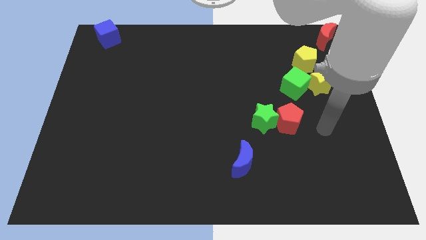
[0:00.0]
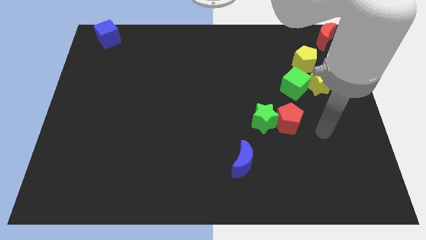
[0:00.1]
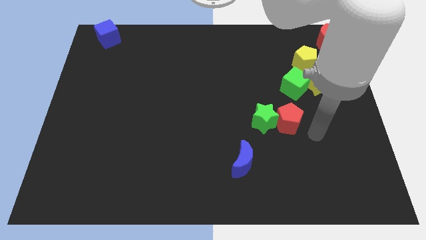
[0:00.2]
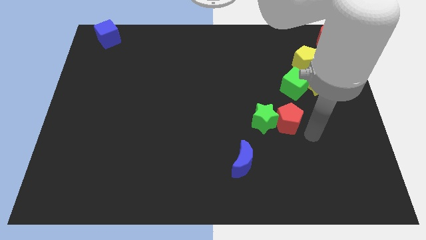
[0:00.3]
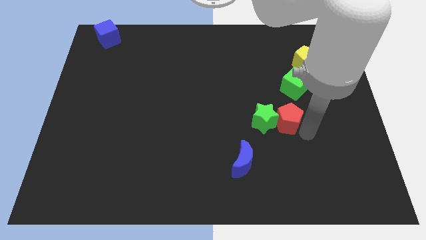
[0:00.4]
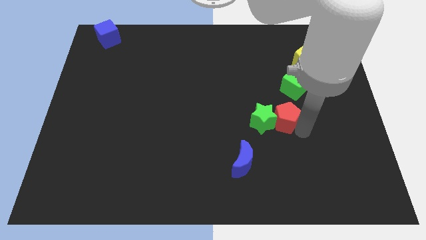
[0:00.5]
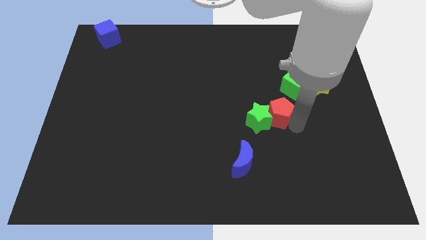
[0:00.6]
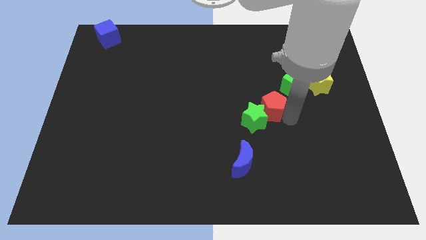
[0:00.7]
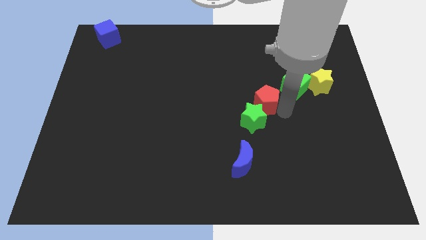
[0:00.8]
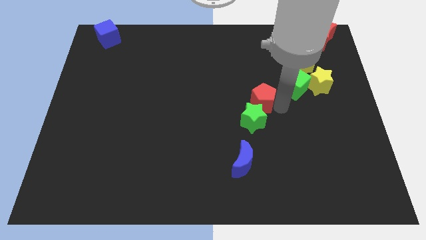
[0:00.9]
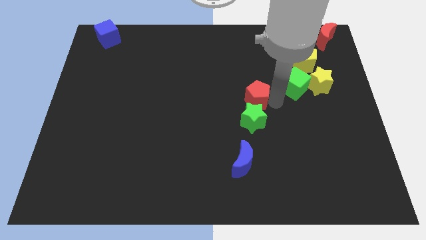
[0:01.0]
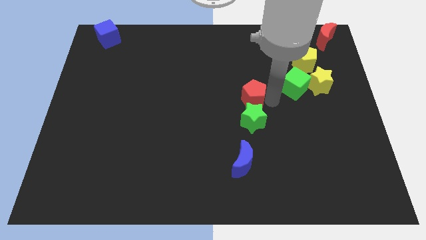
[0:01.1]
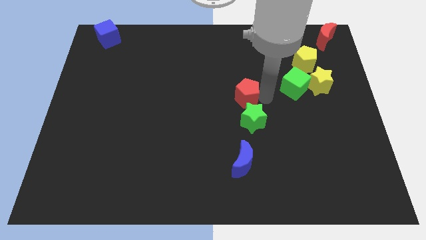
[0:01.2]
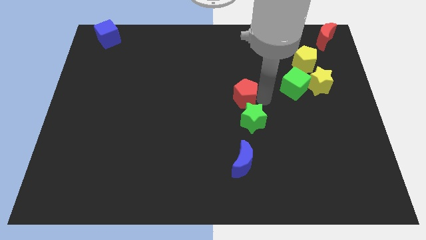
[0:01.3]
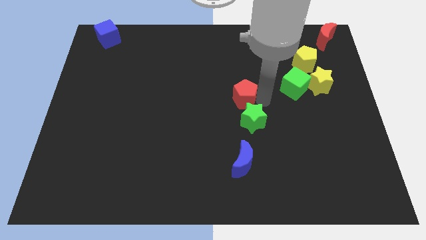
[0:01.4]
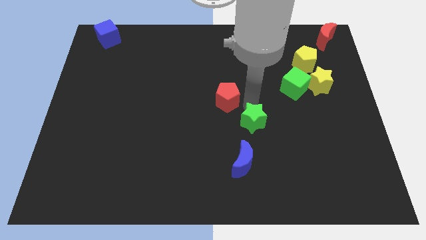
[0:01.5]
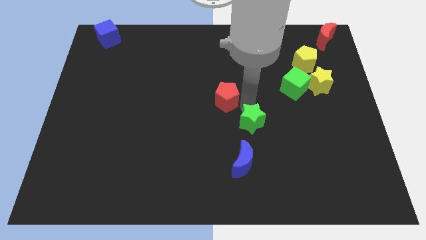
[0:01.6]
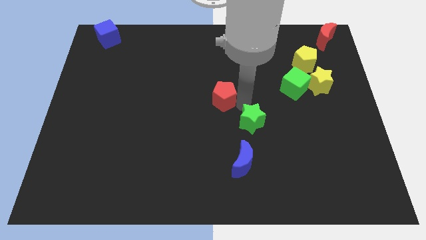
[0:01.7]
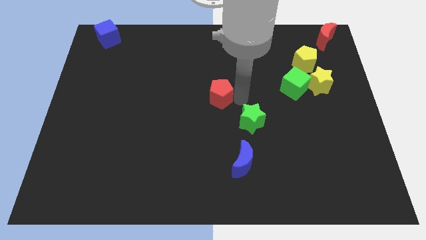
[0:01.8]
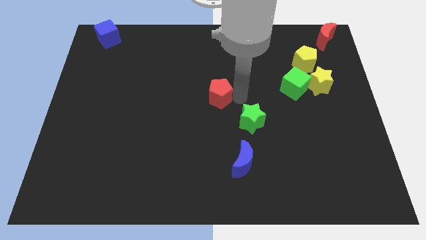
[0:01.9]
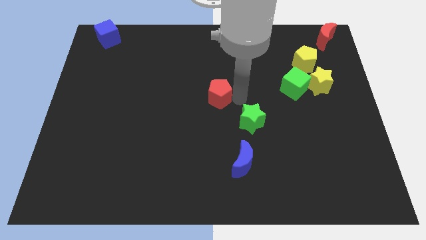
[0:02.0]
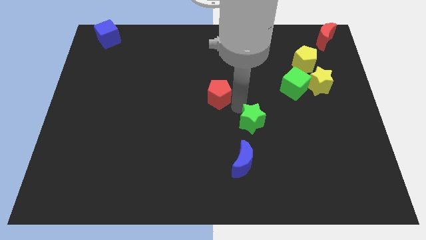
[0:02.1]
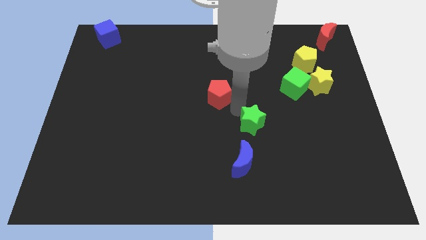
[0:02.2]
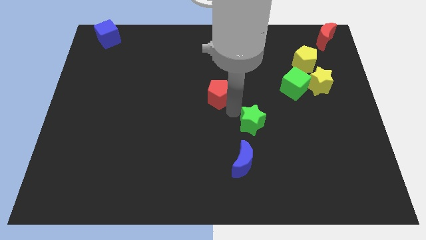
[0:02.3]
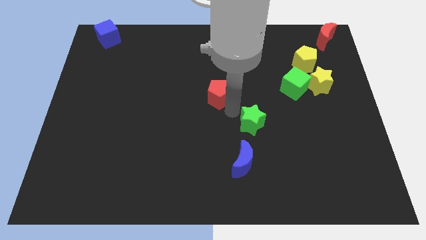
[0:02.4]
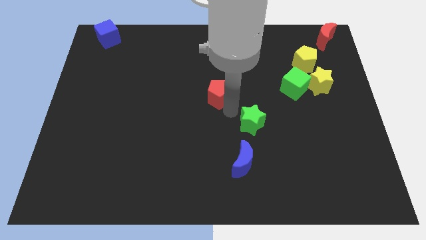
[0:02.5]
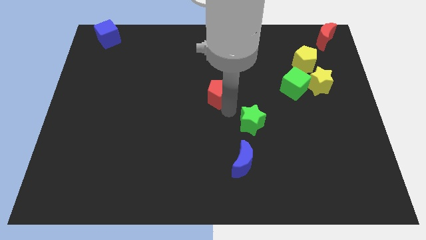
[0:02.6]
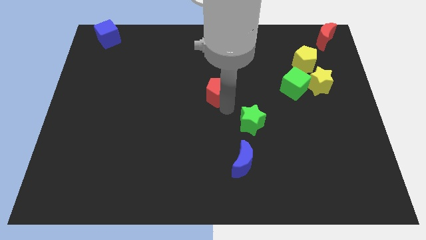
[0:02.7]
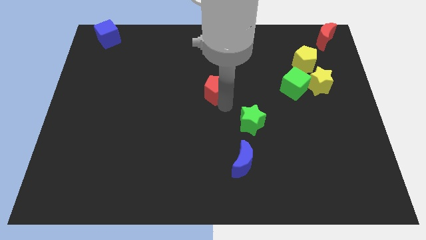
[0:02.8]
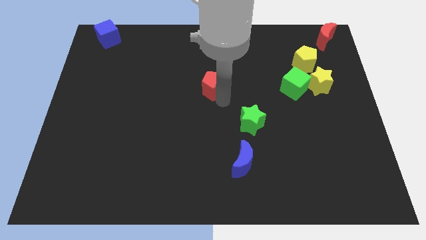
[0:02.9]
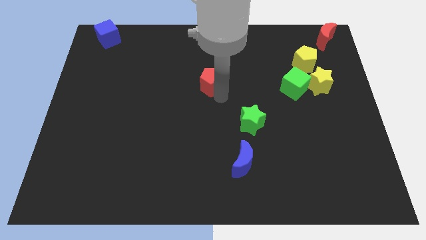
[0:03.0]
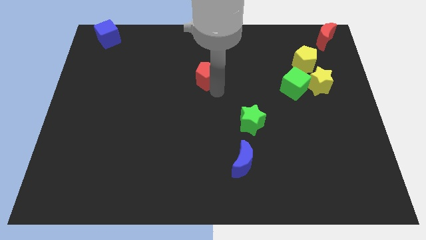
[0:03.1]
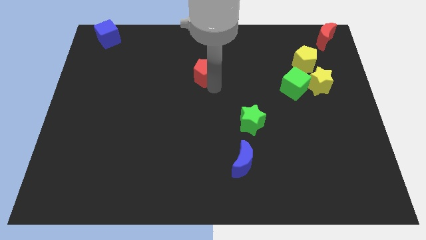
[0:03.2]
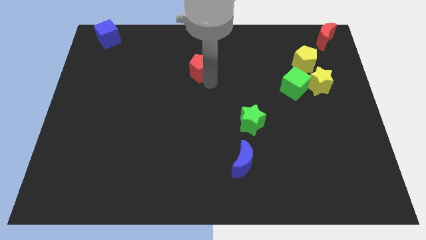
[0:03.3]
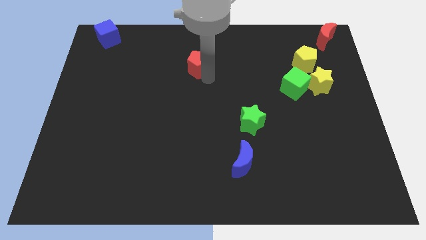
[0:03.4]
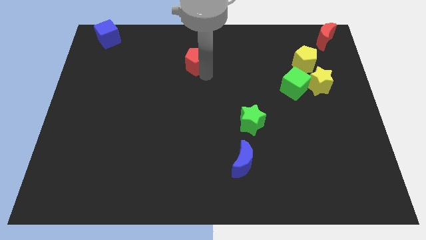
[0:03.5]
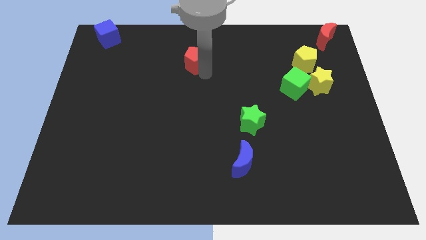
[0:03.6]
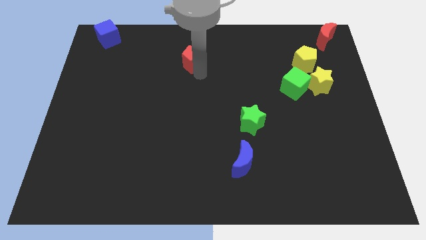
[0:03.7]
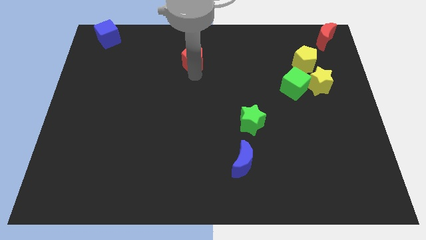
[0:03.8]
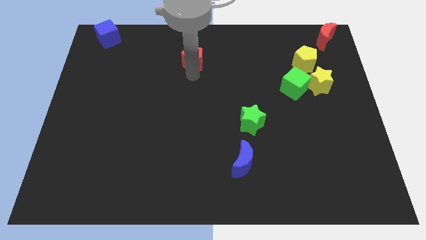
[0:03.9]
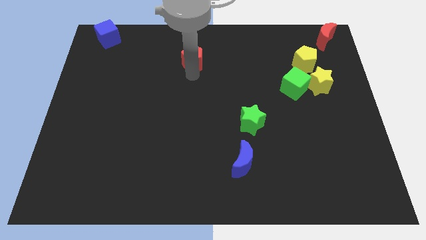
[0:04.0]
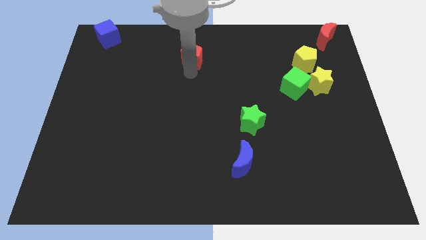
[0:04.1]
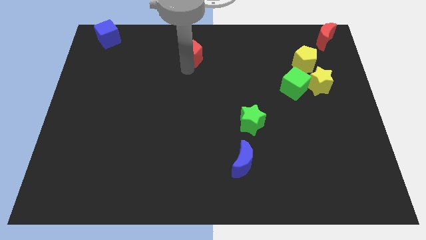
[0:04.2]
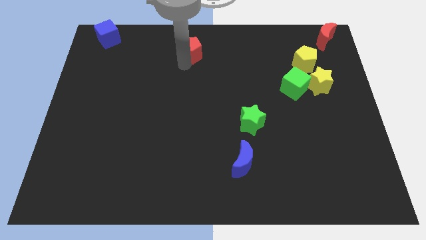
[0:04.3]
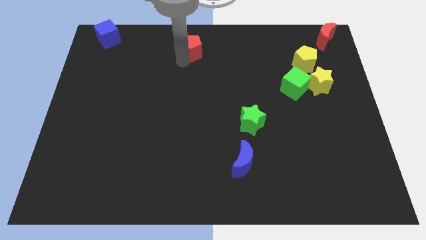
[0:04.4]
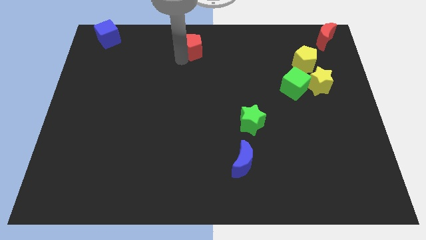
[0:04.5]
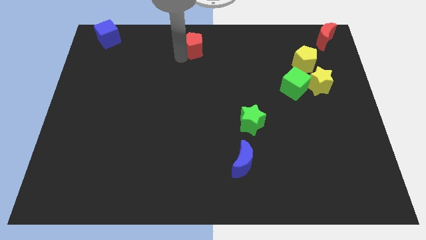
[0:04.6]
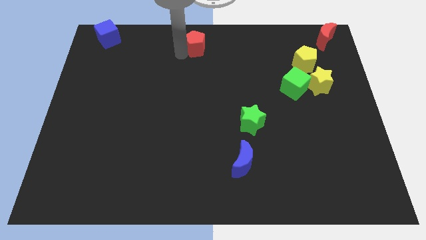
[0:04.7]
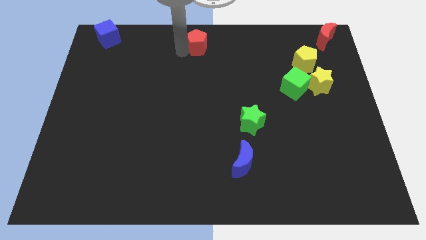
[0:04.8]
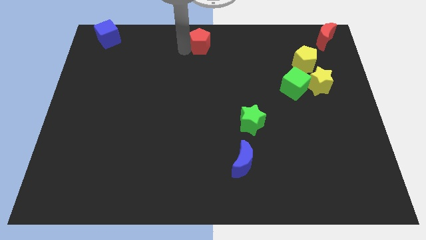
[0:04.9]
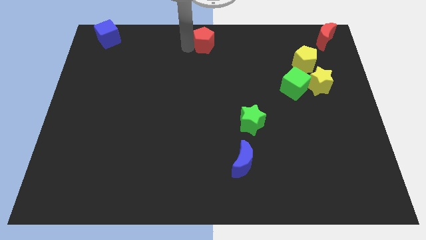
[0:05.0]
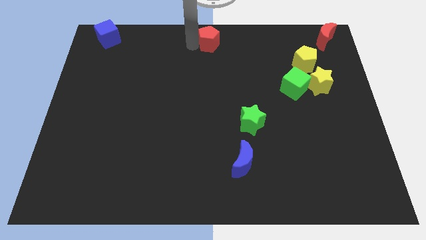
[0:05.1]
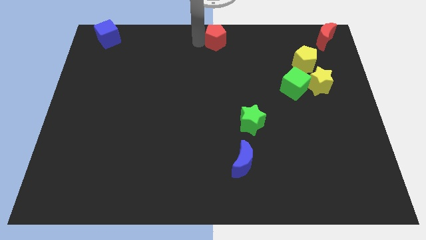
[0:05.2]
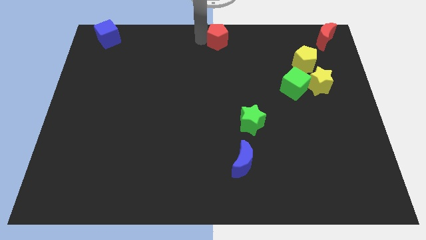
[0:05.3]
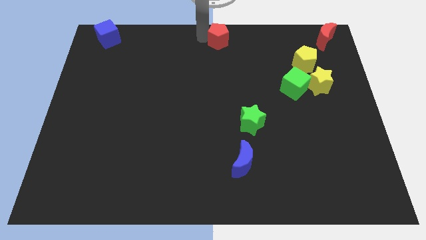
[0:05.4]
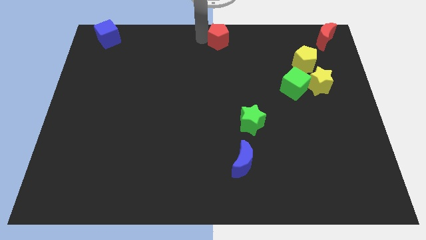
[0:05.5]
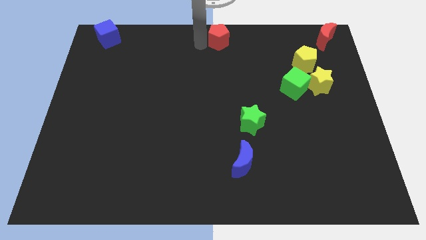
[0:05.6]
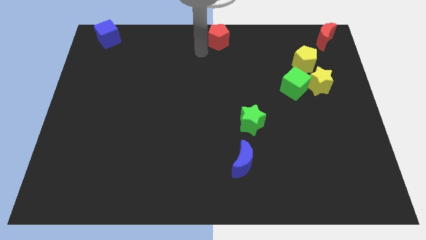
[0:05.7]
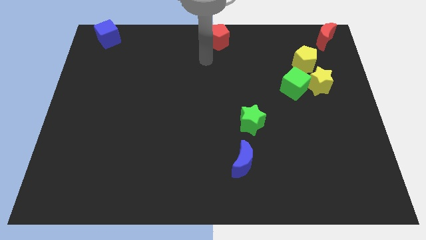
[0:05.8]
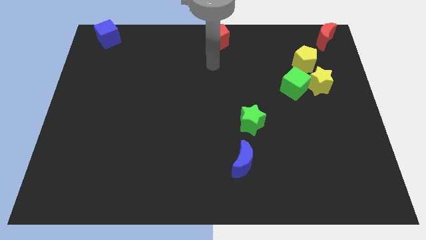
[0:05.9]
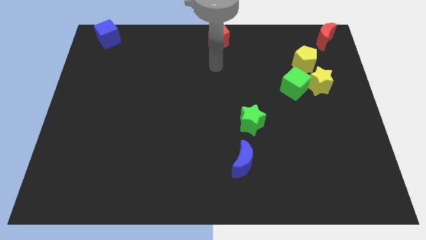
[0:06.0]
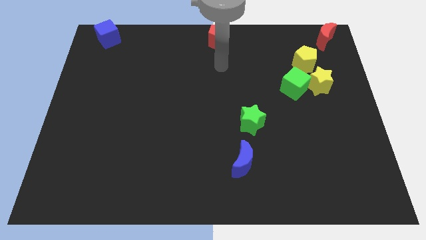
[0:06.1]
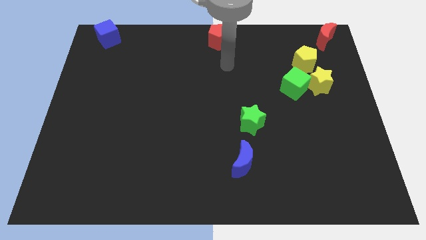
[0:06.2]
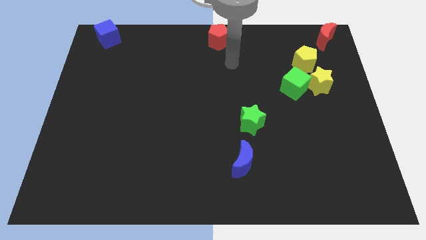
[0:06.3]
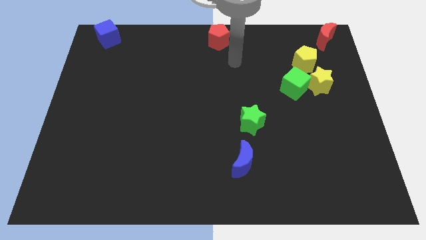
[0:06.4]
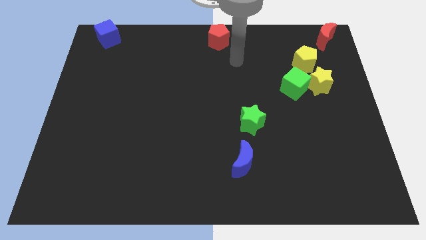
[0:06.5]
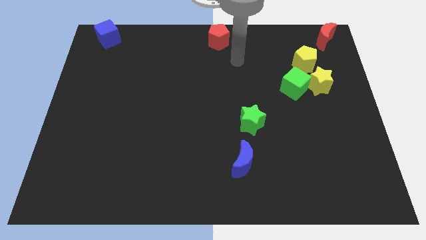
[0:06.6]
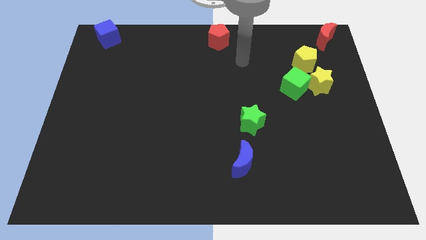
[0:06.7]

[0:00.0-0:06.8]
push the red pentagon to the top center

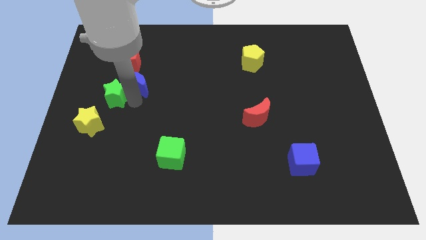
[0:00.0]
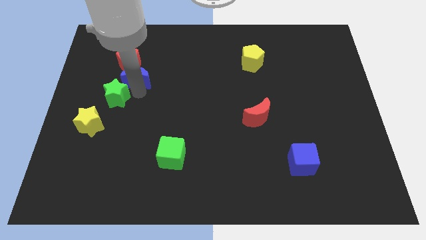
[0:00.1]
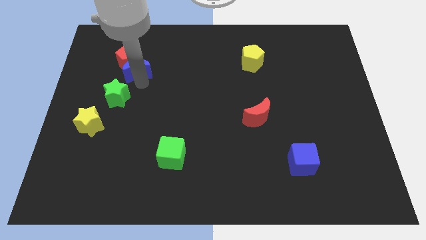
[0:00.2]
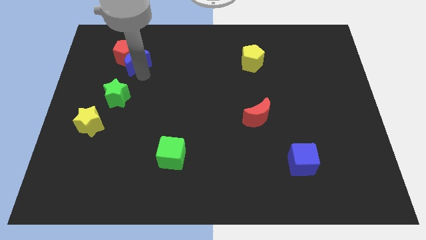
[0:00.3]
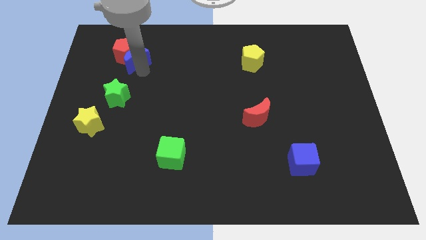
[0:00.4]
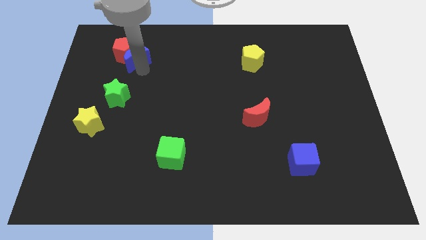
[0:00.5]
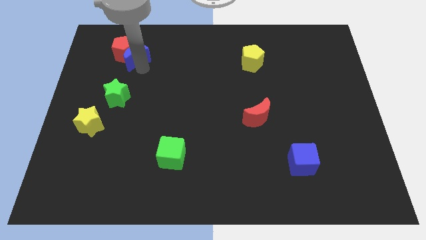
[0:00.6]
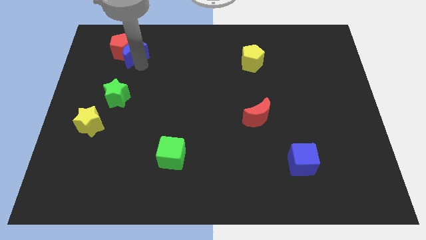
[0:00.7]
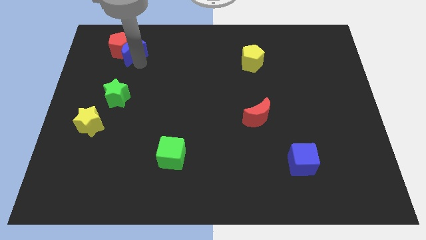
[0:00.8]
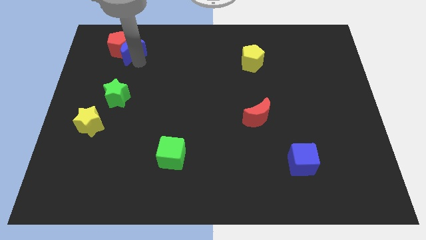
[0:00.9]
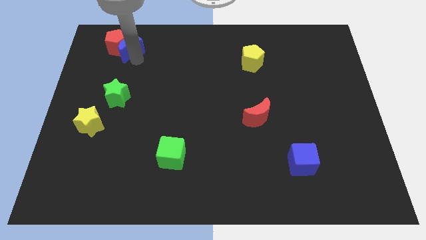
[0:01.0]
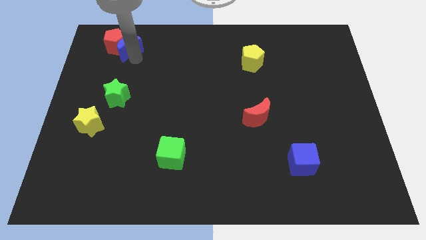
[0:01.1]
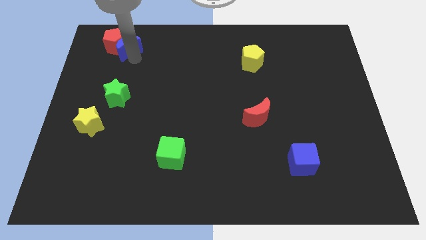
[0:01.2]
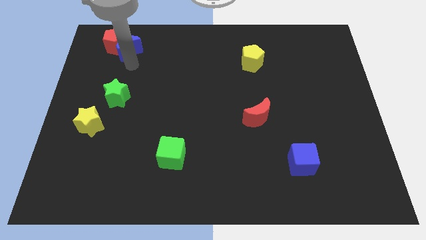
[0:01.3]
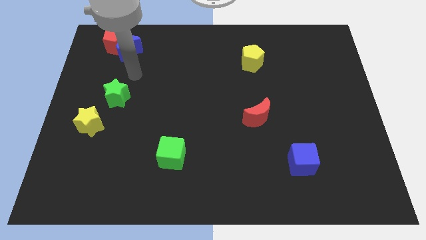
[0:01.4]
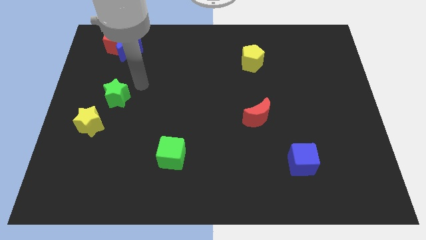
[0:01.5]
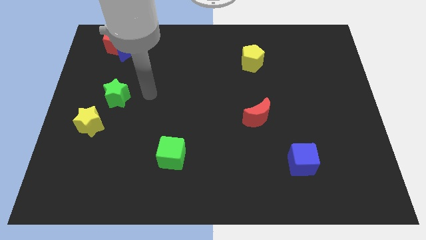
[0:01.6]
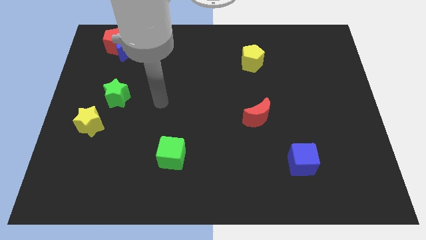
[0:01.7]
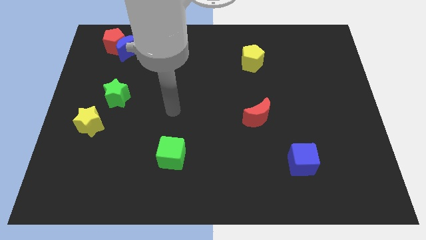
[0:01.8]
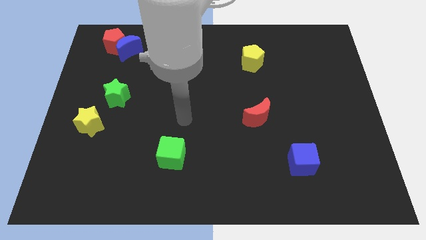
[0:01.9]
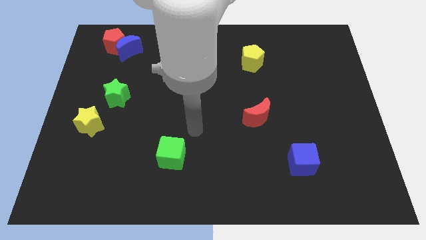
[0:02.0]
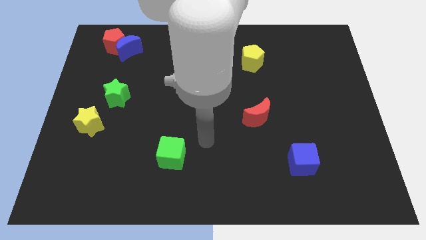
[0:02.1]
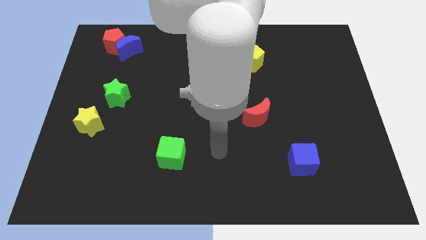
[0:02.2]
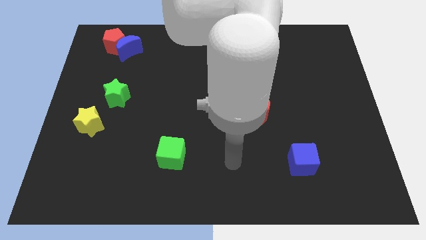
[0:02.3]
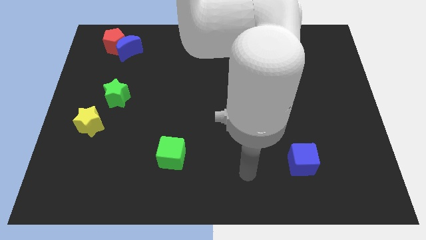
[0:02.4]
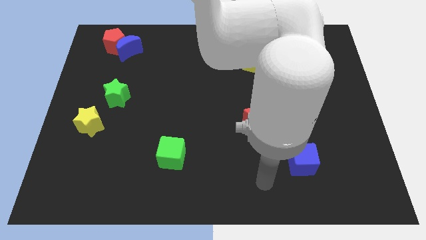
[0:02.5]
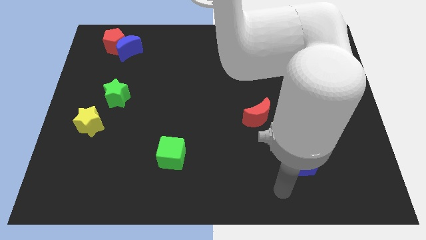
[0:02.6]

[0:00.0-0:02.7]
push the blue moon and the red pentagon towards the top left
